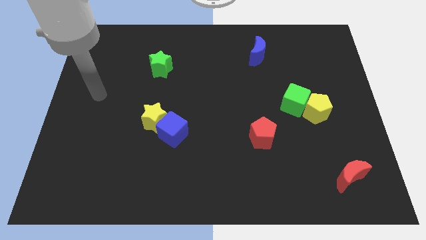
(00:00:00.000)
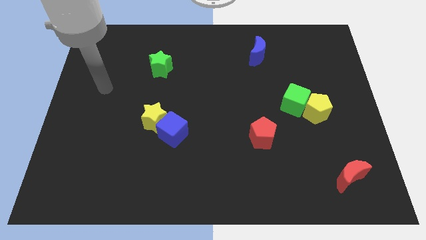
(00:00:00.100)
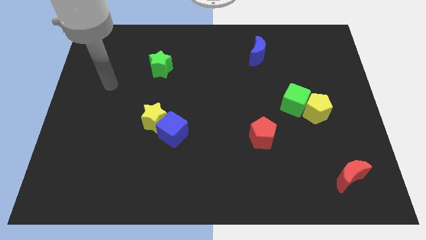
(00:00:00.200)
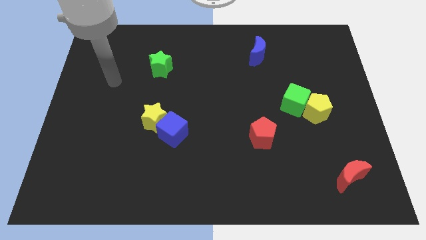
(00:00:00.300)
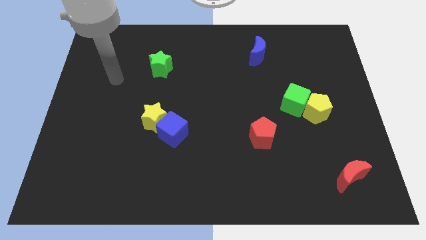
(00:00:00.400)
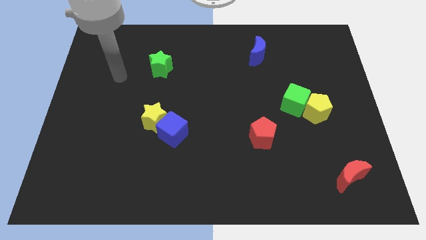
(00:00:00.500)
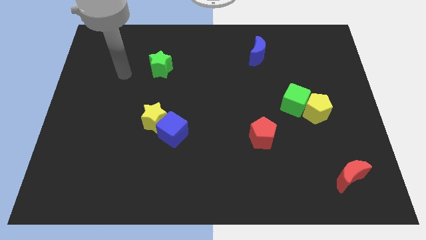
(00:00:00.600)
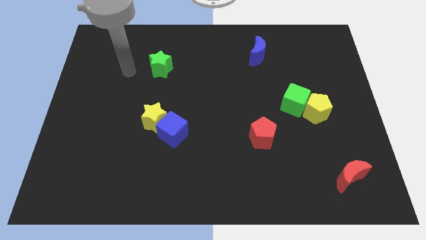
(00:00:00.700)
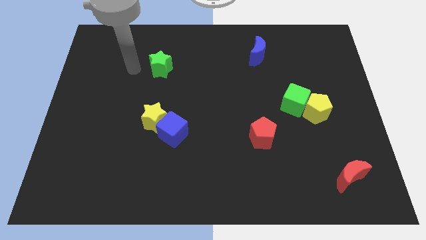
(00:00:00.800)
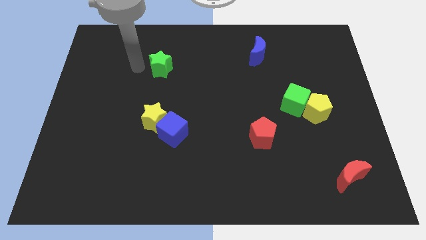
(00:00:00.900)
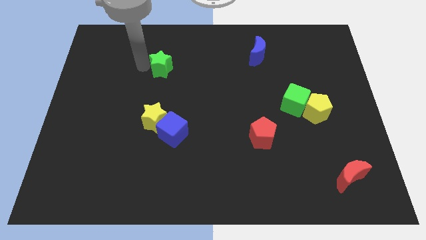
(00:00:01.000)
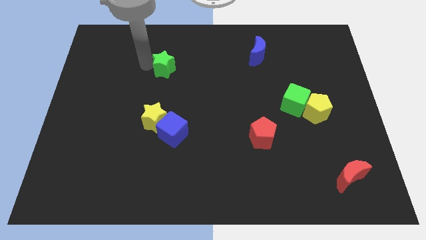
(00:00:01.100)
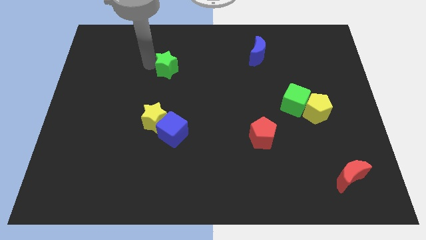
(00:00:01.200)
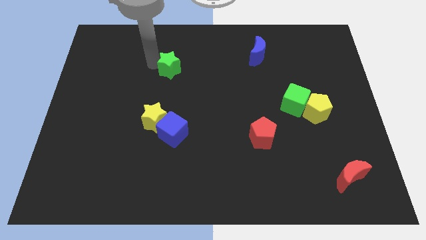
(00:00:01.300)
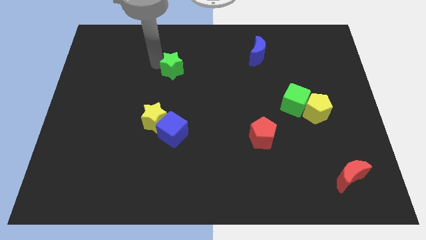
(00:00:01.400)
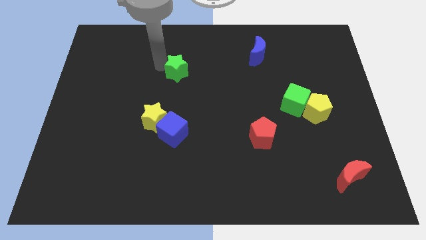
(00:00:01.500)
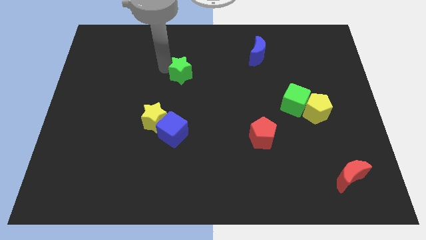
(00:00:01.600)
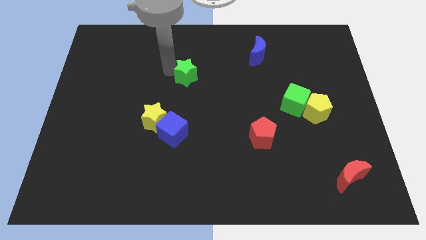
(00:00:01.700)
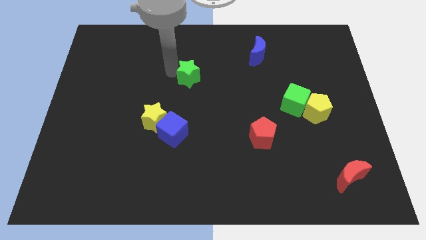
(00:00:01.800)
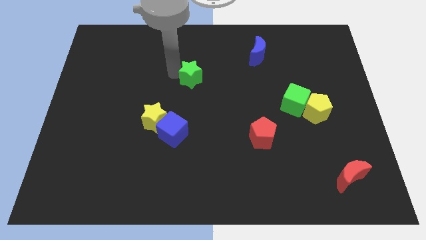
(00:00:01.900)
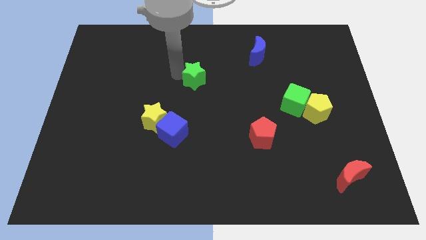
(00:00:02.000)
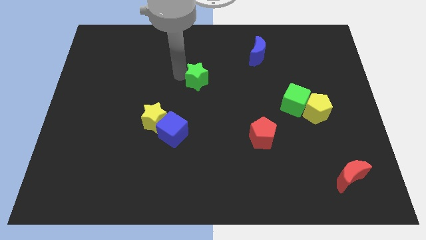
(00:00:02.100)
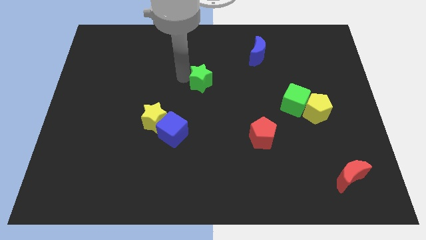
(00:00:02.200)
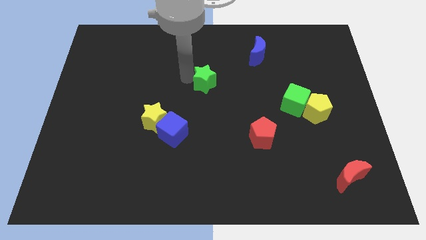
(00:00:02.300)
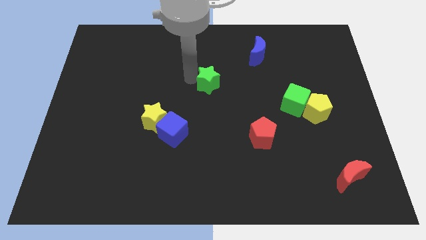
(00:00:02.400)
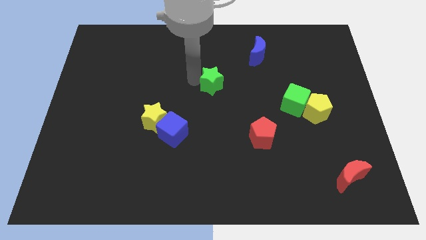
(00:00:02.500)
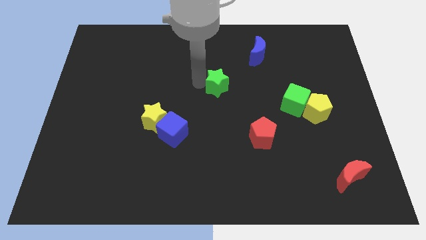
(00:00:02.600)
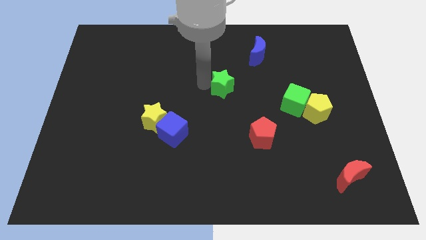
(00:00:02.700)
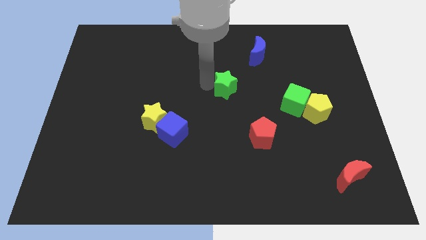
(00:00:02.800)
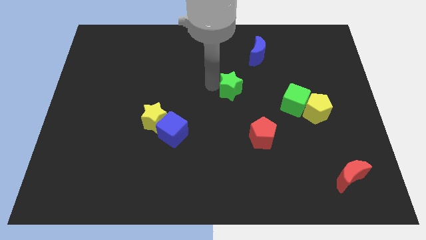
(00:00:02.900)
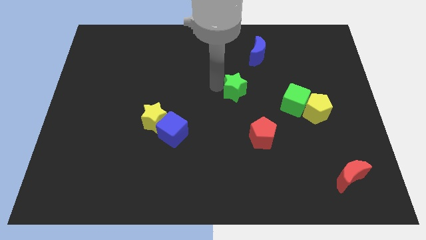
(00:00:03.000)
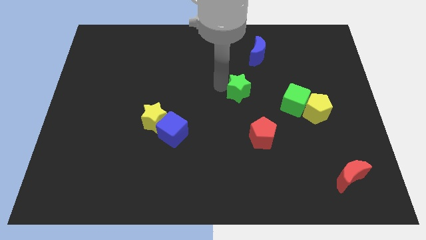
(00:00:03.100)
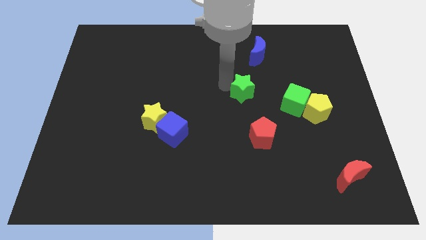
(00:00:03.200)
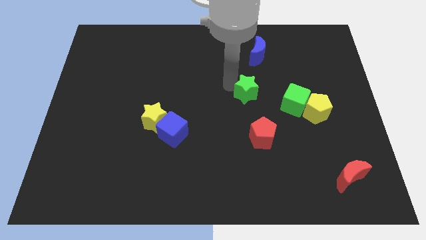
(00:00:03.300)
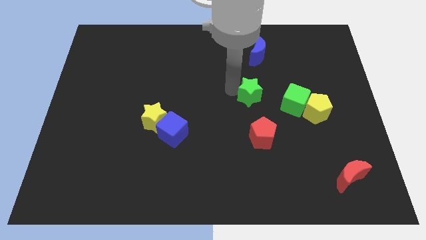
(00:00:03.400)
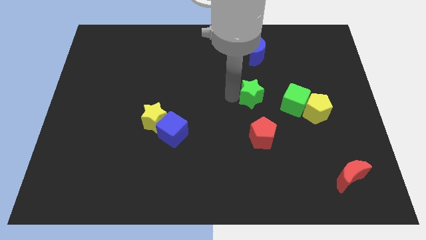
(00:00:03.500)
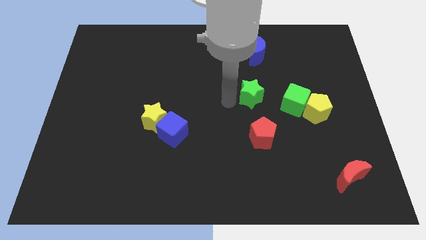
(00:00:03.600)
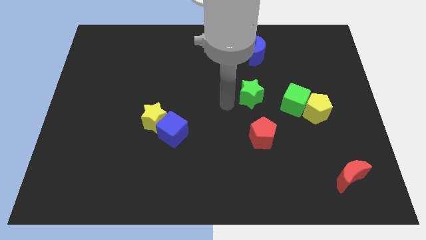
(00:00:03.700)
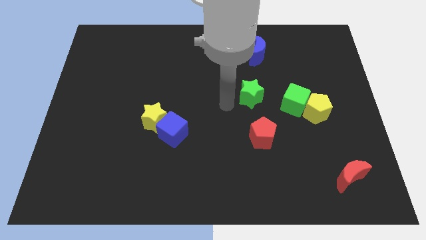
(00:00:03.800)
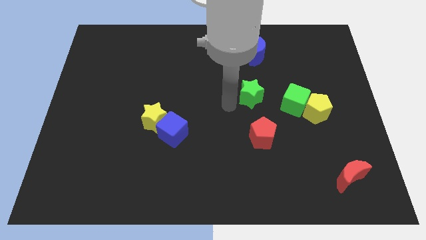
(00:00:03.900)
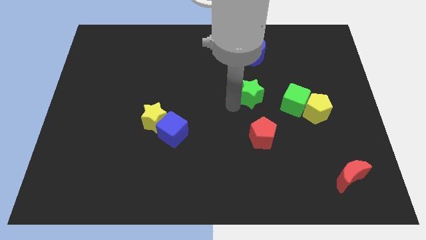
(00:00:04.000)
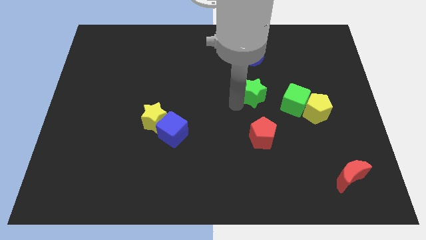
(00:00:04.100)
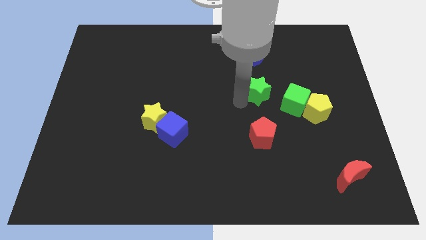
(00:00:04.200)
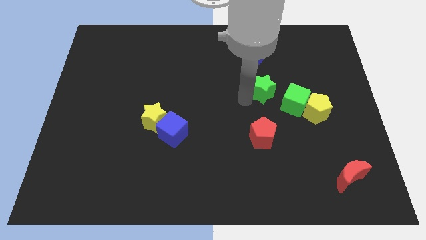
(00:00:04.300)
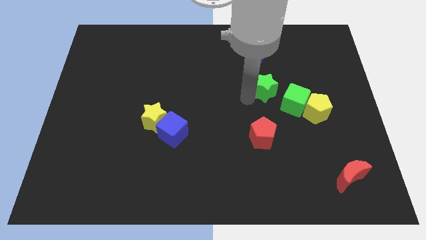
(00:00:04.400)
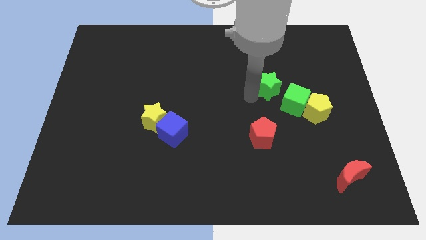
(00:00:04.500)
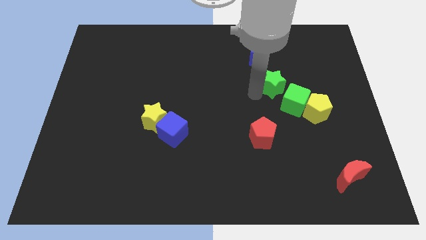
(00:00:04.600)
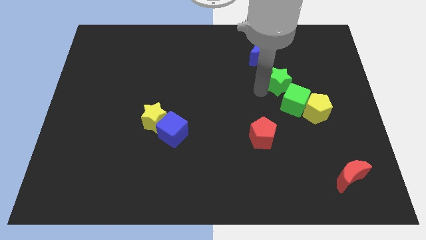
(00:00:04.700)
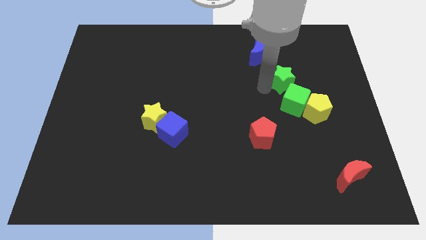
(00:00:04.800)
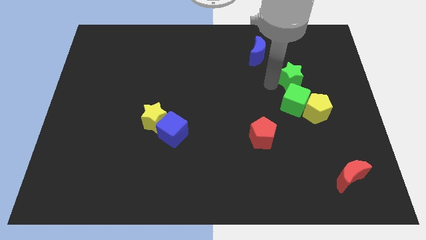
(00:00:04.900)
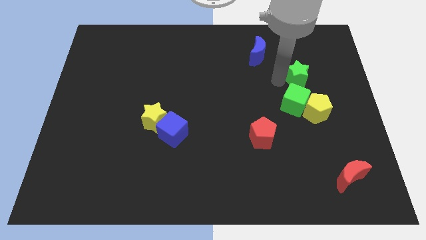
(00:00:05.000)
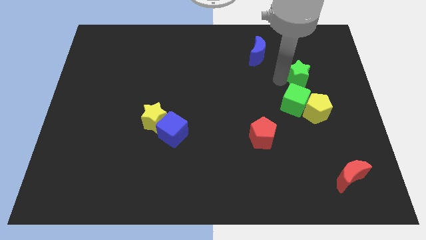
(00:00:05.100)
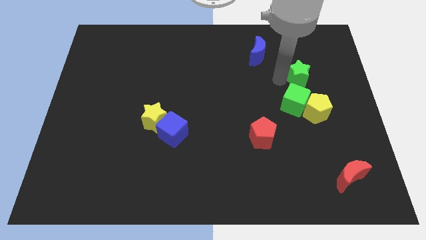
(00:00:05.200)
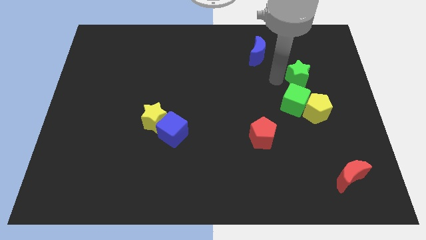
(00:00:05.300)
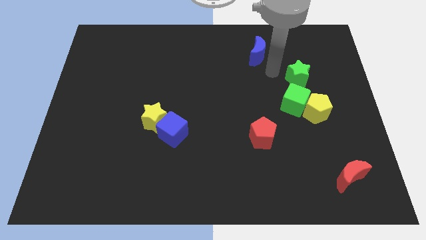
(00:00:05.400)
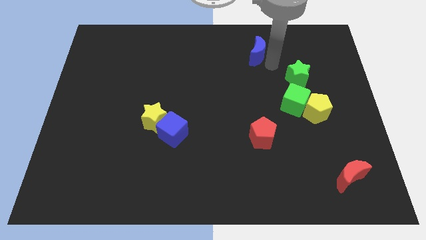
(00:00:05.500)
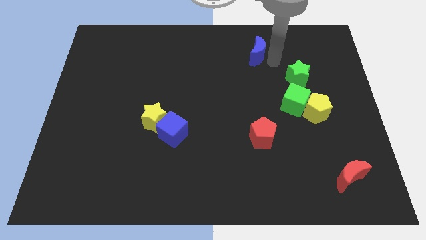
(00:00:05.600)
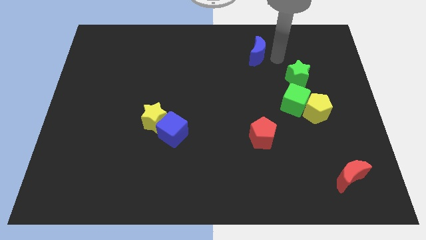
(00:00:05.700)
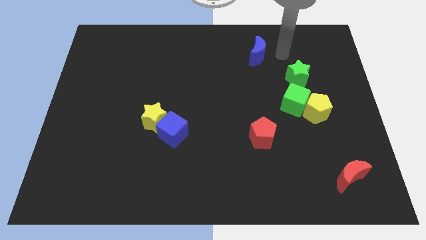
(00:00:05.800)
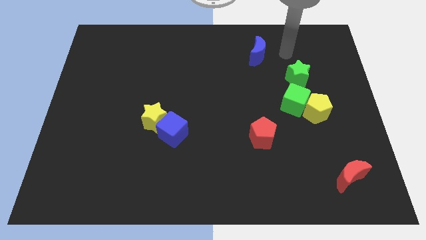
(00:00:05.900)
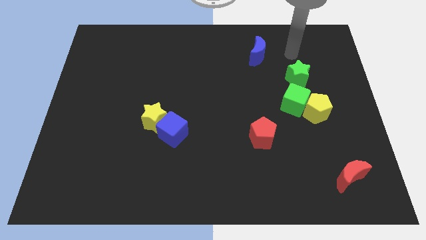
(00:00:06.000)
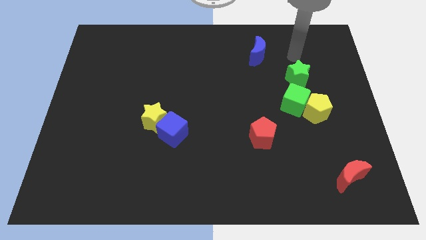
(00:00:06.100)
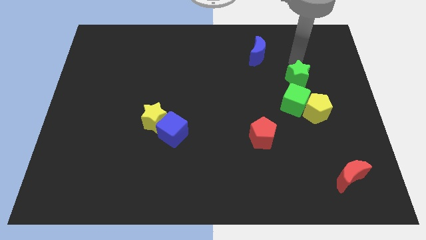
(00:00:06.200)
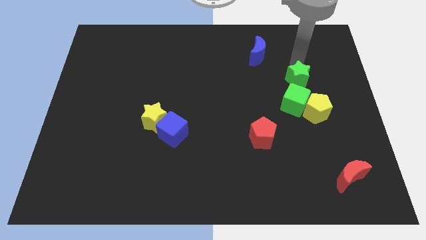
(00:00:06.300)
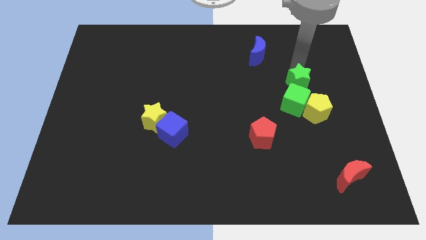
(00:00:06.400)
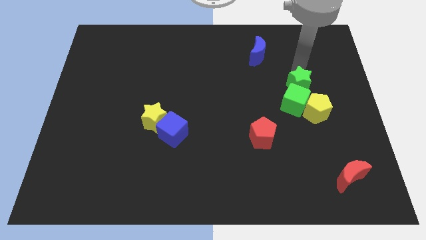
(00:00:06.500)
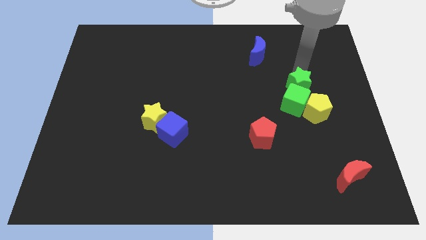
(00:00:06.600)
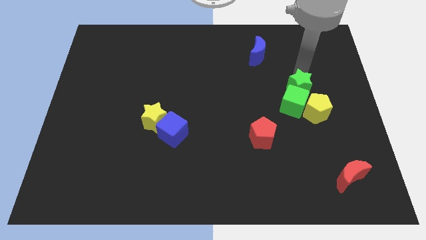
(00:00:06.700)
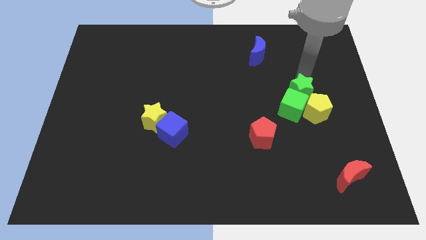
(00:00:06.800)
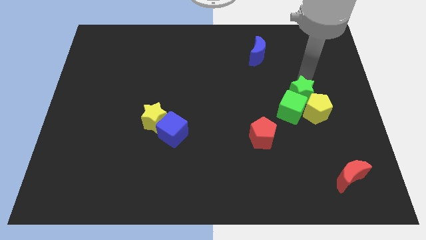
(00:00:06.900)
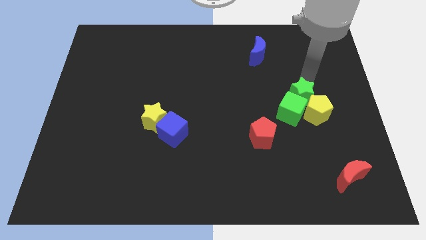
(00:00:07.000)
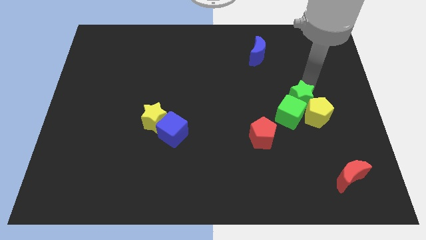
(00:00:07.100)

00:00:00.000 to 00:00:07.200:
push the green star to the yellow pentagon

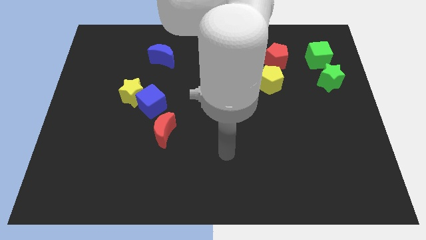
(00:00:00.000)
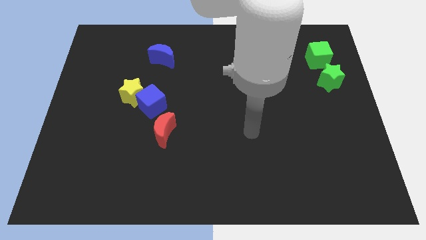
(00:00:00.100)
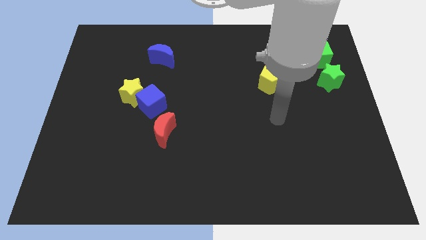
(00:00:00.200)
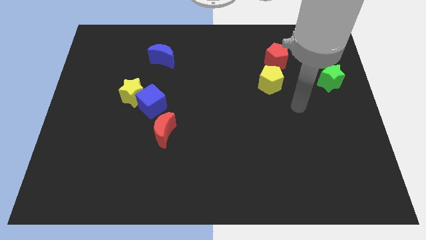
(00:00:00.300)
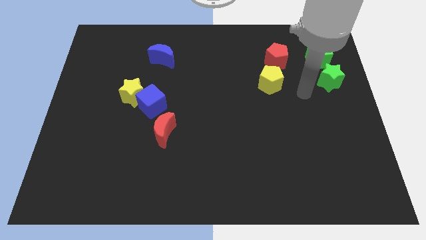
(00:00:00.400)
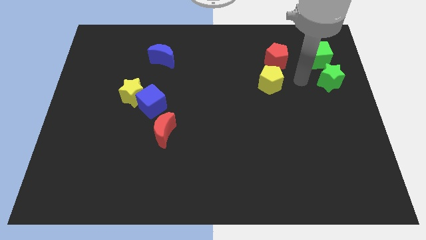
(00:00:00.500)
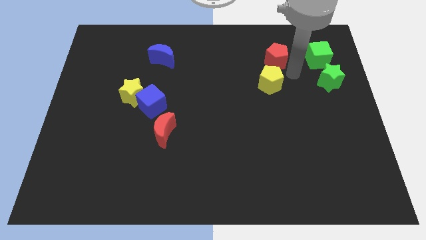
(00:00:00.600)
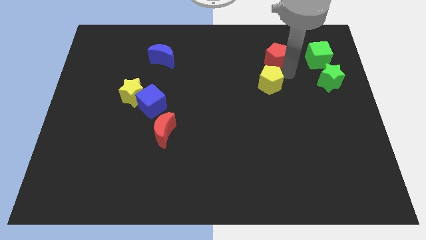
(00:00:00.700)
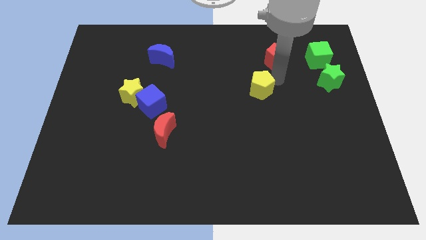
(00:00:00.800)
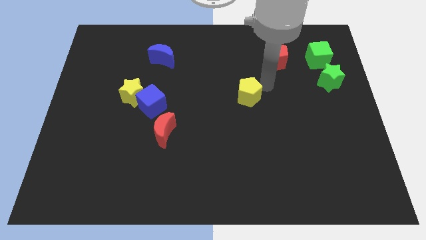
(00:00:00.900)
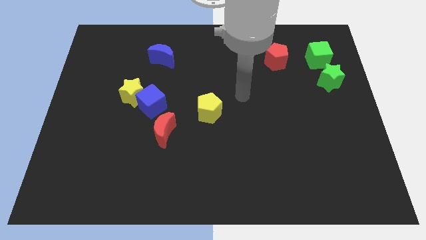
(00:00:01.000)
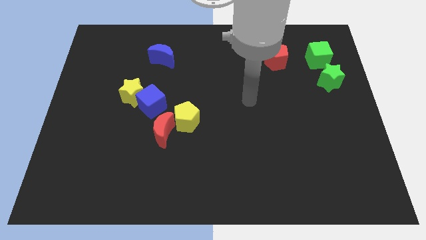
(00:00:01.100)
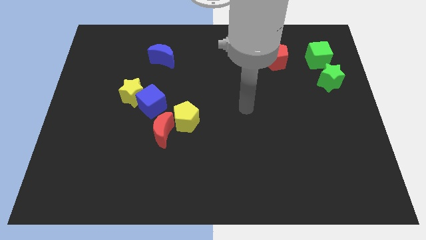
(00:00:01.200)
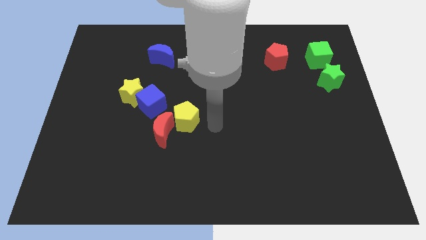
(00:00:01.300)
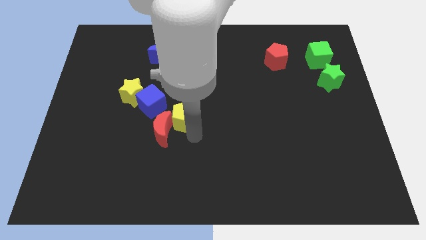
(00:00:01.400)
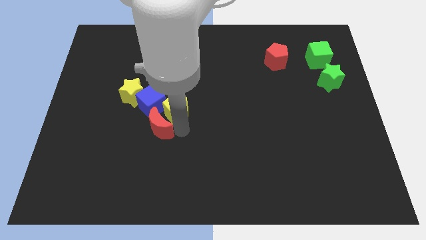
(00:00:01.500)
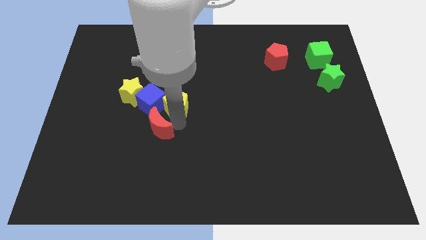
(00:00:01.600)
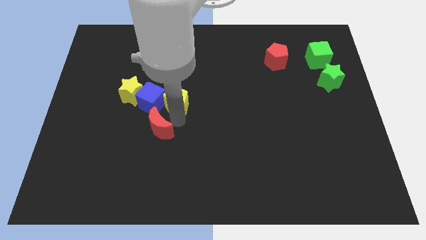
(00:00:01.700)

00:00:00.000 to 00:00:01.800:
slide the yellow pentagon towards the blue cube
